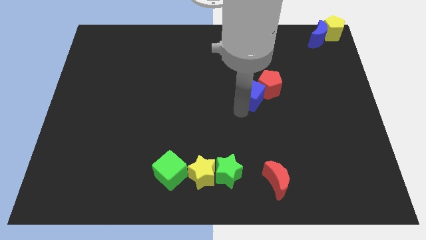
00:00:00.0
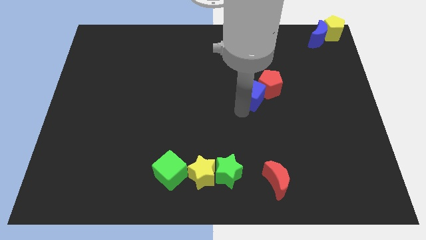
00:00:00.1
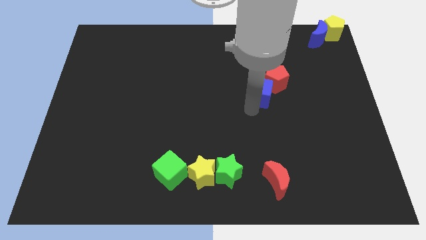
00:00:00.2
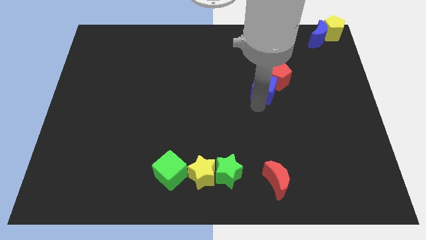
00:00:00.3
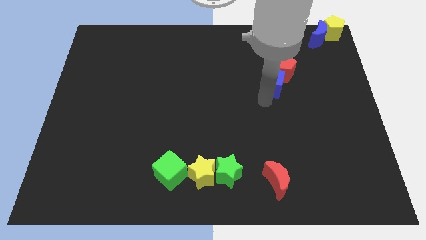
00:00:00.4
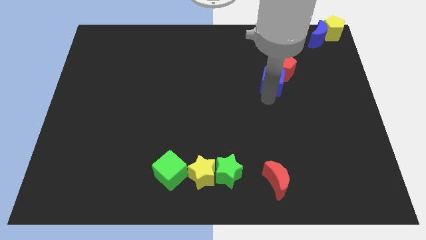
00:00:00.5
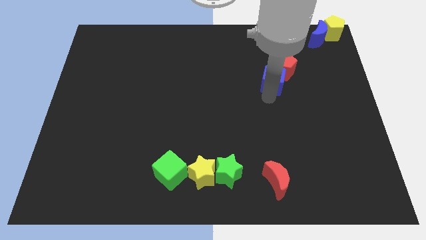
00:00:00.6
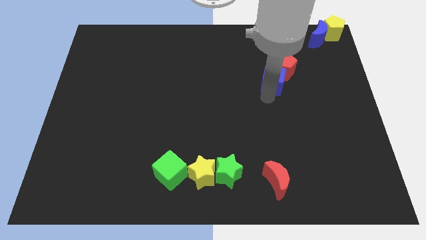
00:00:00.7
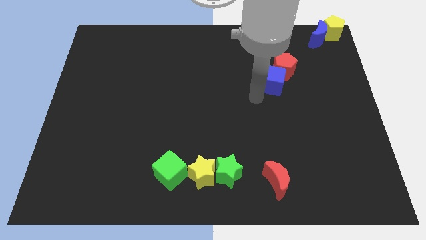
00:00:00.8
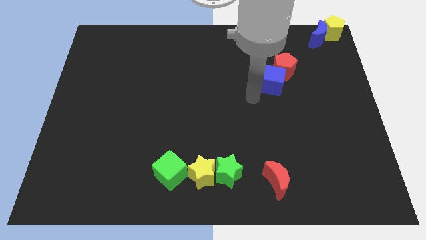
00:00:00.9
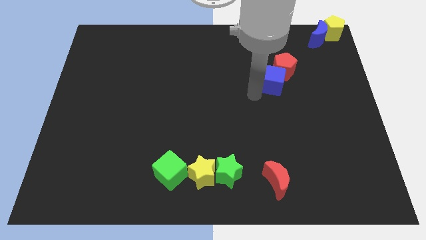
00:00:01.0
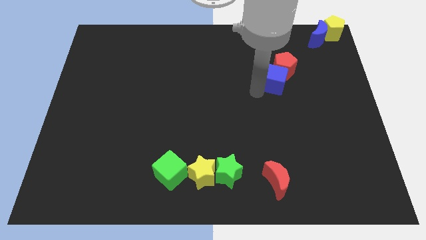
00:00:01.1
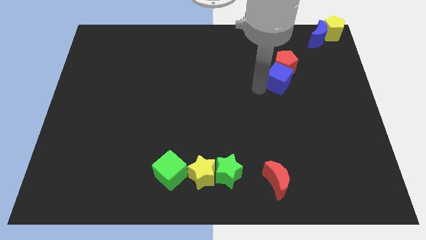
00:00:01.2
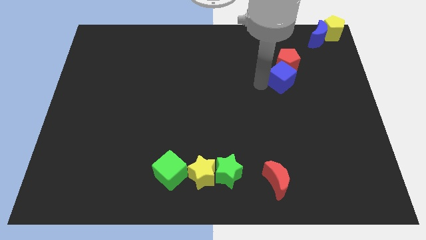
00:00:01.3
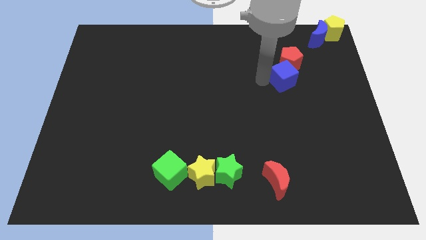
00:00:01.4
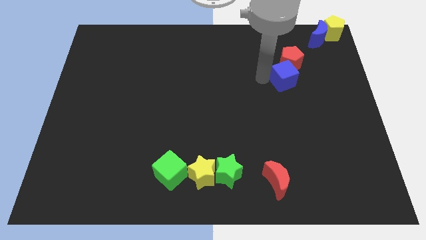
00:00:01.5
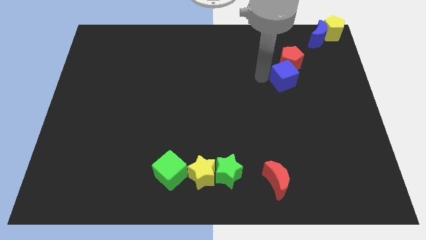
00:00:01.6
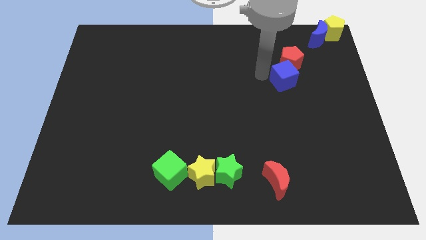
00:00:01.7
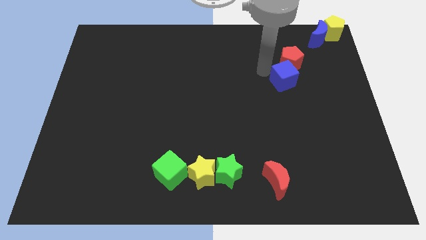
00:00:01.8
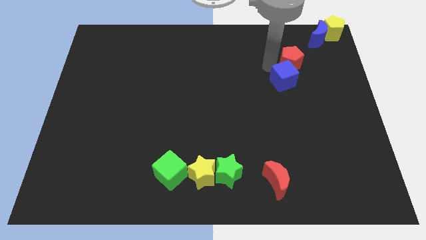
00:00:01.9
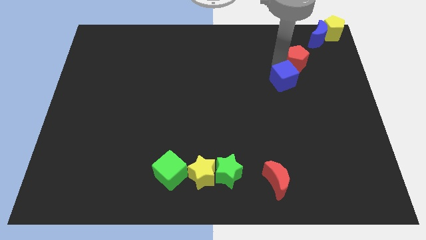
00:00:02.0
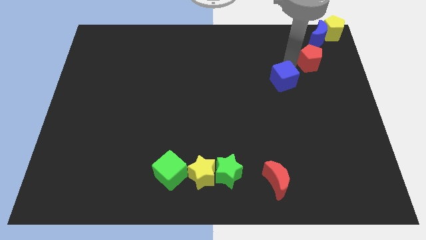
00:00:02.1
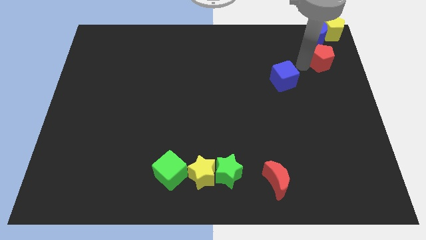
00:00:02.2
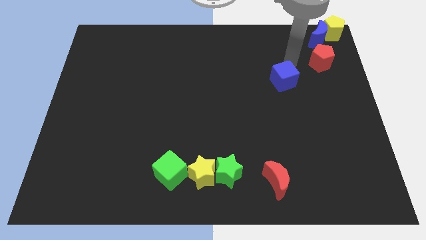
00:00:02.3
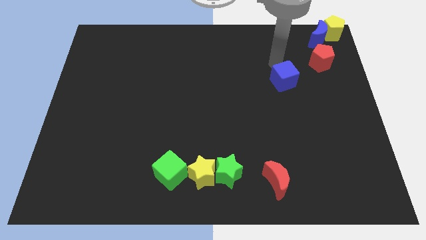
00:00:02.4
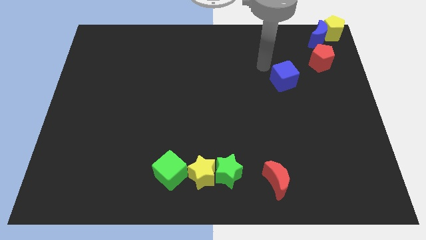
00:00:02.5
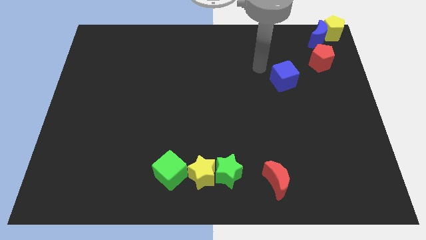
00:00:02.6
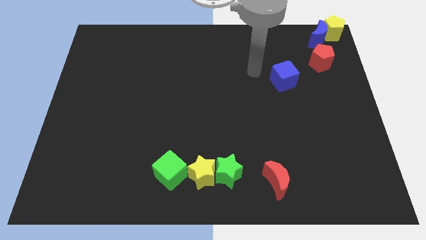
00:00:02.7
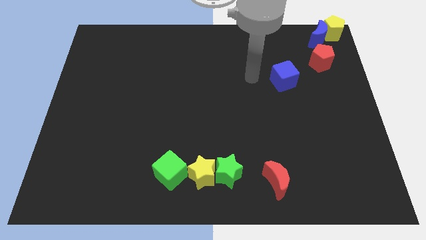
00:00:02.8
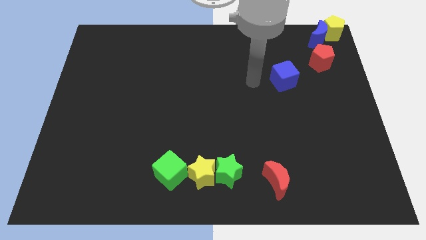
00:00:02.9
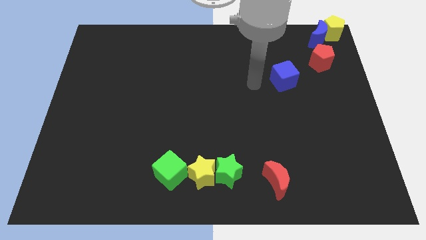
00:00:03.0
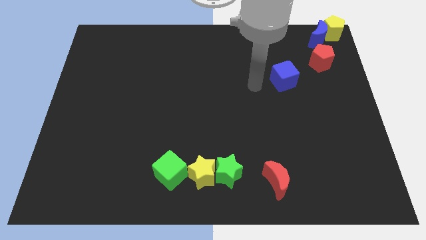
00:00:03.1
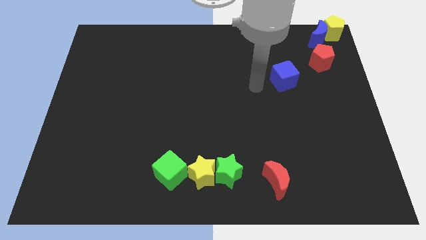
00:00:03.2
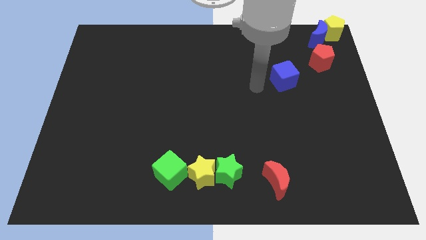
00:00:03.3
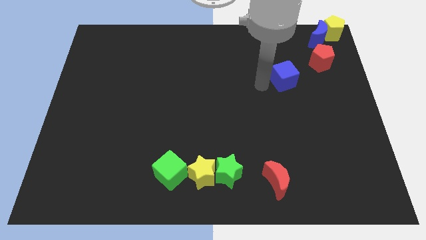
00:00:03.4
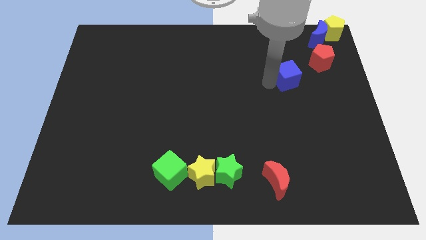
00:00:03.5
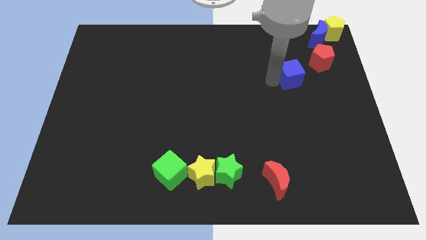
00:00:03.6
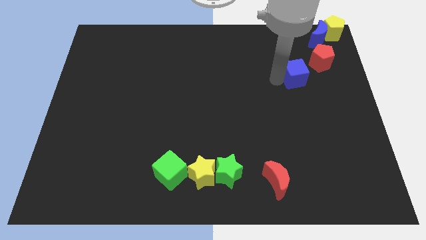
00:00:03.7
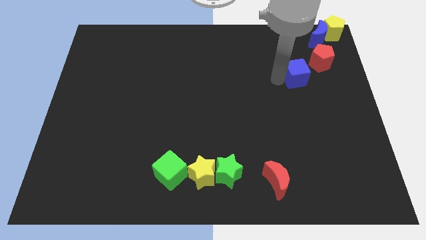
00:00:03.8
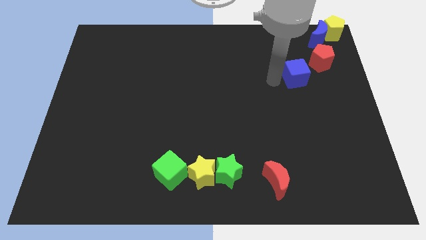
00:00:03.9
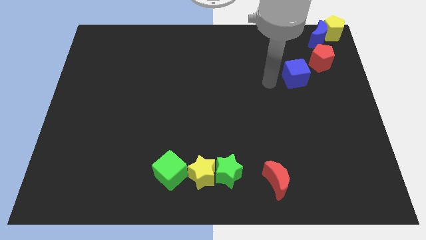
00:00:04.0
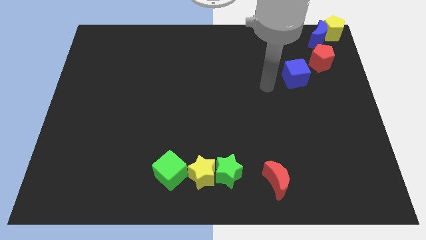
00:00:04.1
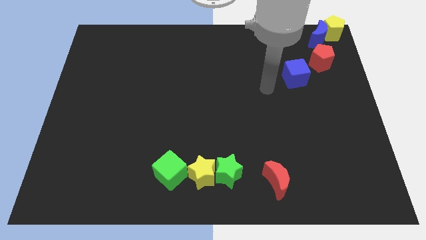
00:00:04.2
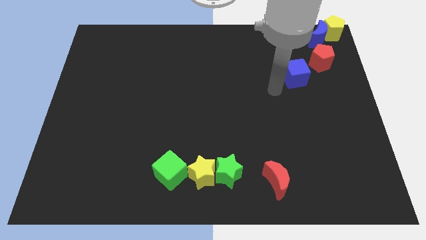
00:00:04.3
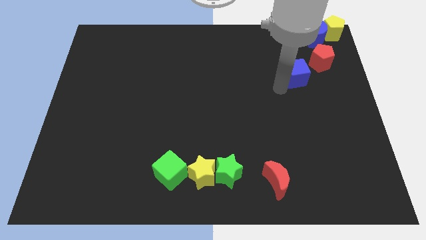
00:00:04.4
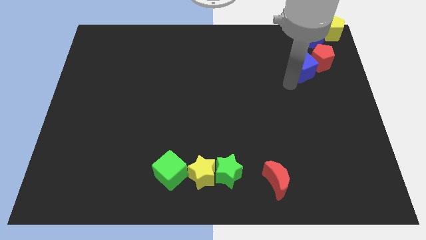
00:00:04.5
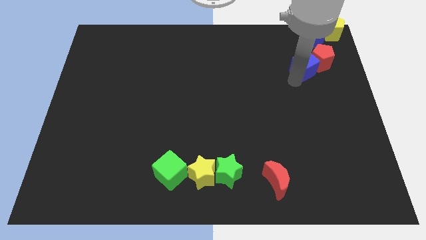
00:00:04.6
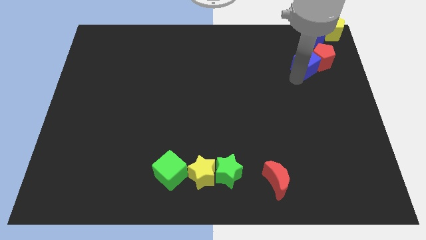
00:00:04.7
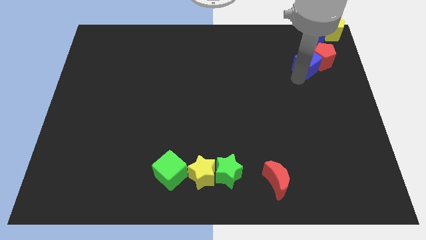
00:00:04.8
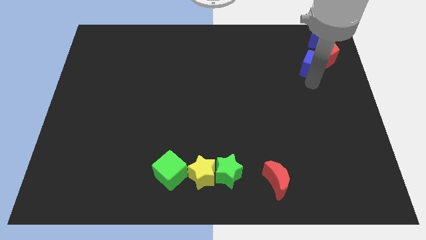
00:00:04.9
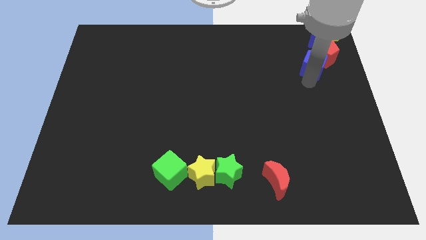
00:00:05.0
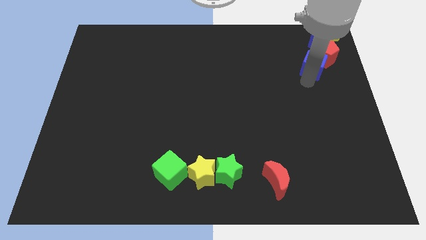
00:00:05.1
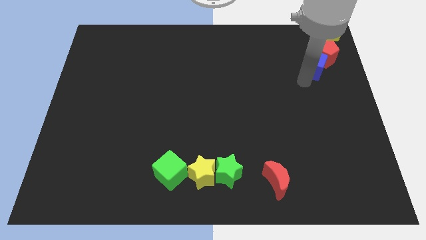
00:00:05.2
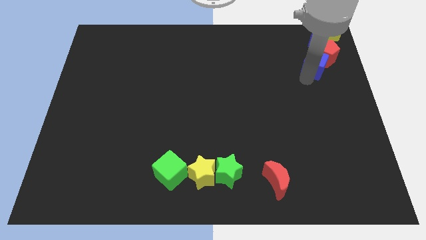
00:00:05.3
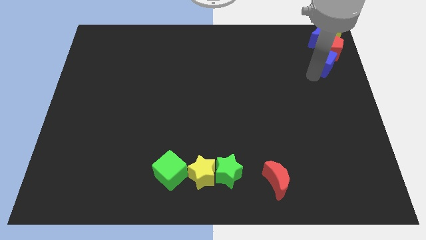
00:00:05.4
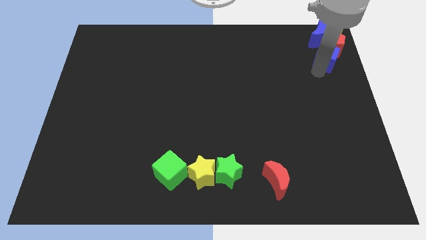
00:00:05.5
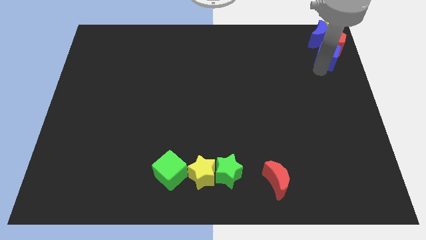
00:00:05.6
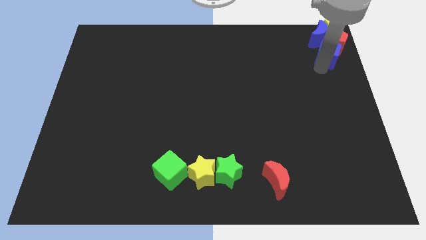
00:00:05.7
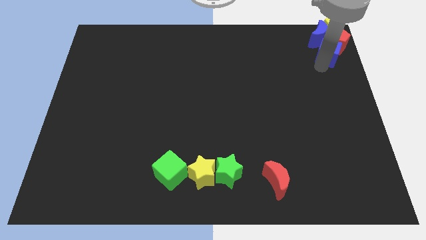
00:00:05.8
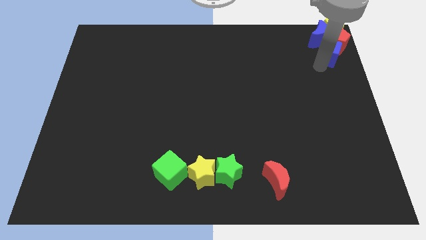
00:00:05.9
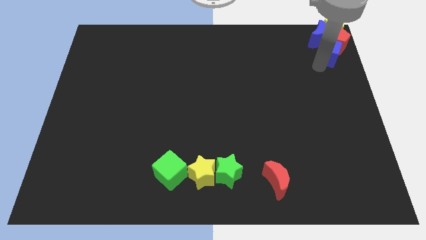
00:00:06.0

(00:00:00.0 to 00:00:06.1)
push the red pentagon with the blue cube to the top right of the board

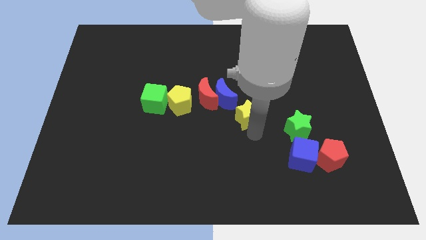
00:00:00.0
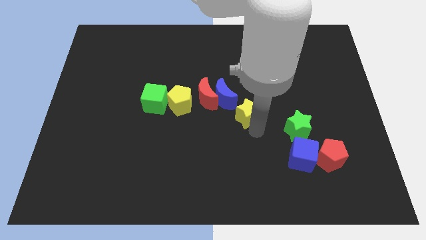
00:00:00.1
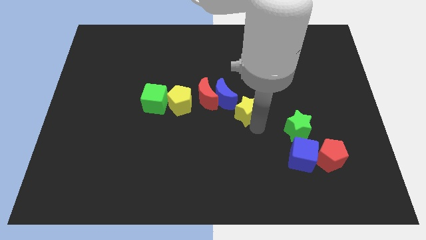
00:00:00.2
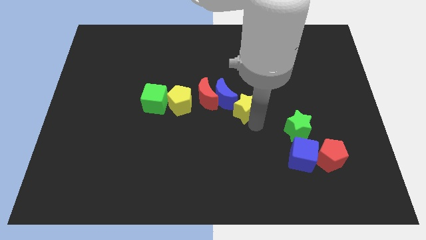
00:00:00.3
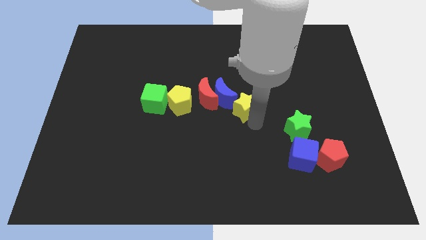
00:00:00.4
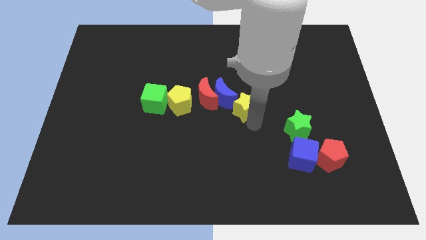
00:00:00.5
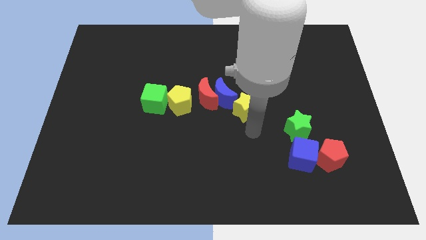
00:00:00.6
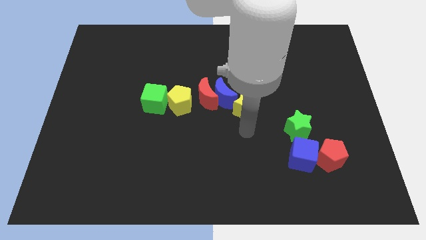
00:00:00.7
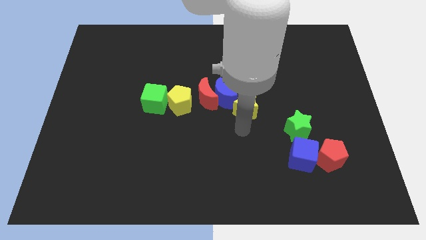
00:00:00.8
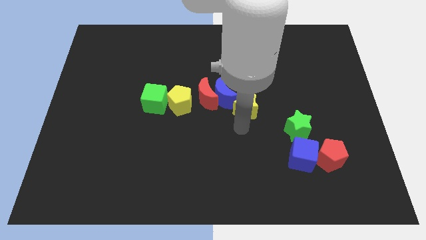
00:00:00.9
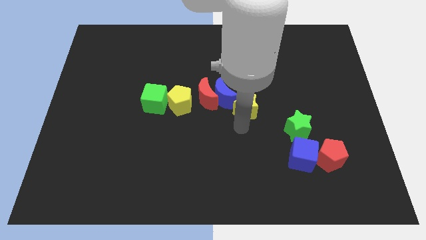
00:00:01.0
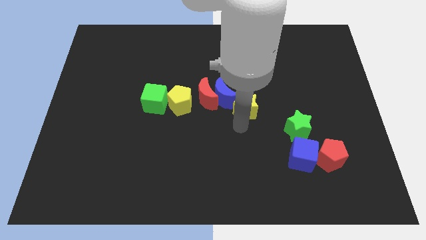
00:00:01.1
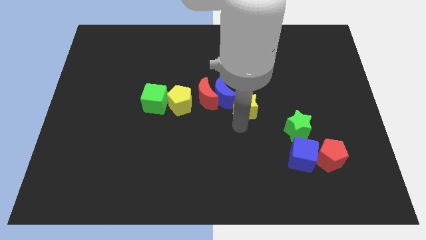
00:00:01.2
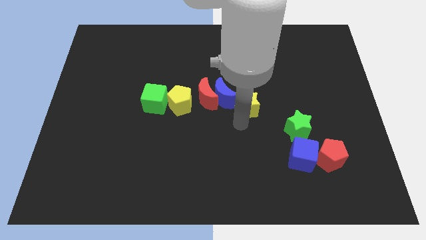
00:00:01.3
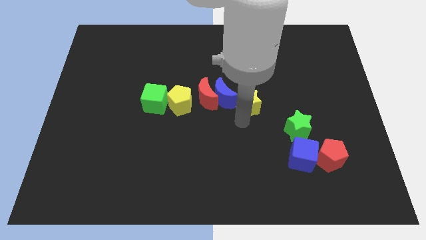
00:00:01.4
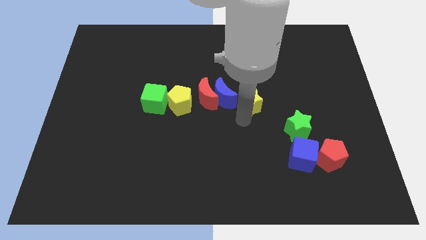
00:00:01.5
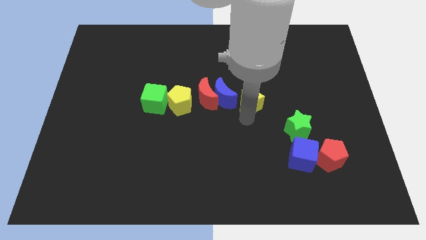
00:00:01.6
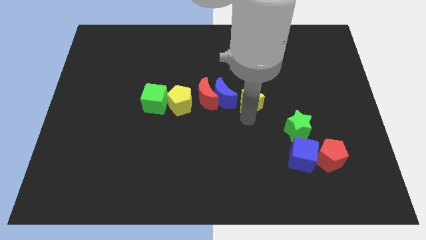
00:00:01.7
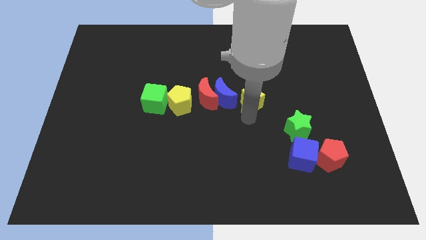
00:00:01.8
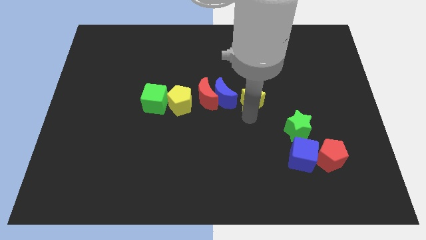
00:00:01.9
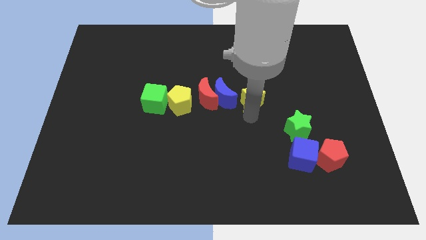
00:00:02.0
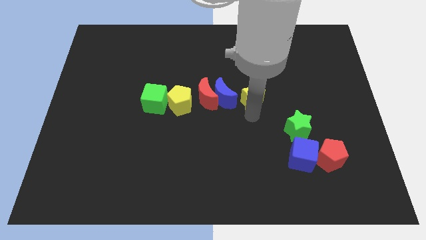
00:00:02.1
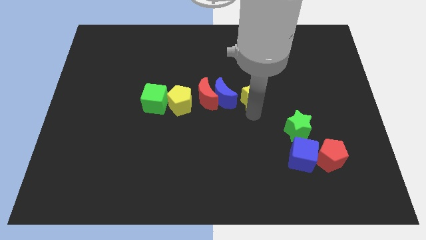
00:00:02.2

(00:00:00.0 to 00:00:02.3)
place yellow star towards right of blue moon

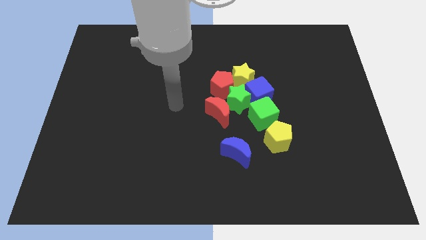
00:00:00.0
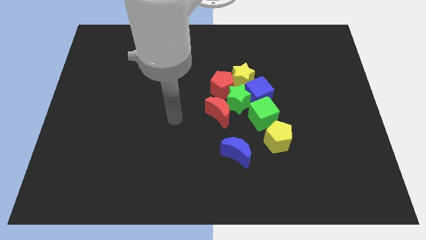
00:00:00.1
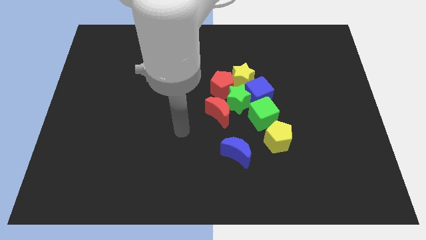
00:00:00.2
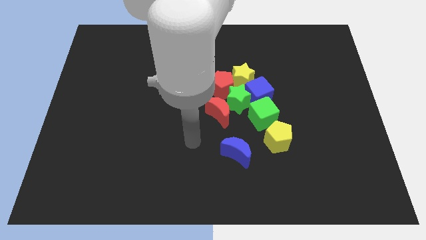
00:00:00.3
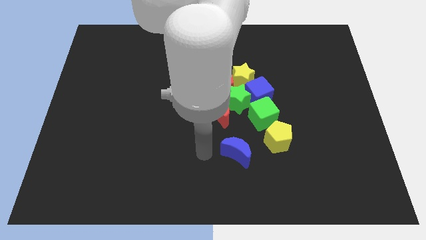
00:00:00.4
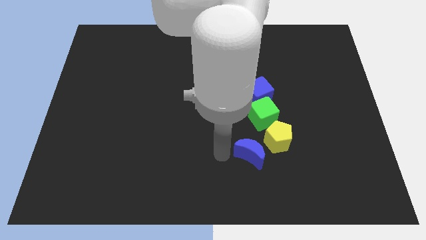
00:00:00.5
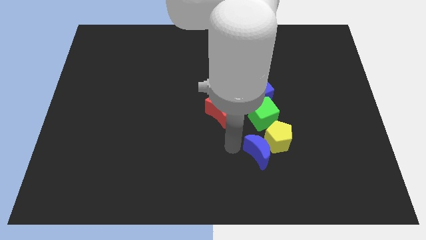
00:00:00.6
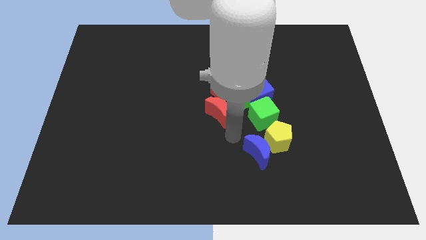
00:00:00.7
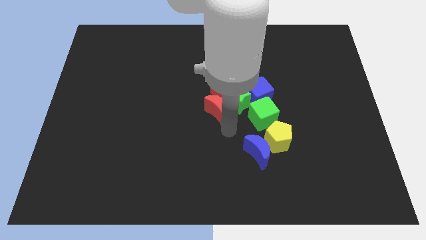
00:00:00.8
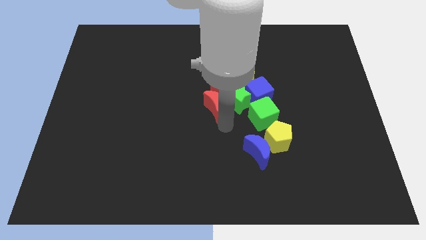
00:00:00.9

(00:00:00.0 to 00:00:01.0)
place the blue crescent left of yellow pentagon
